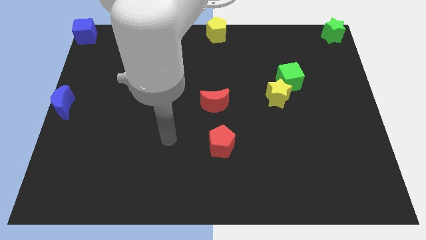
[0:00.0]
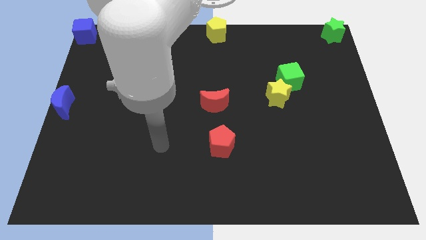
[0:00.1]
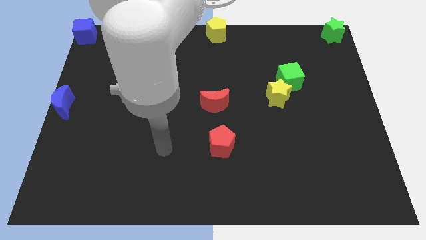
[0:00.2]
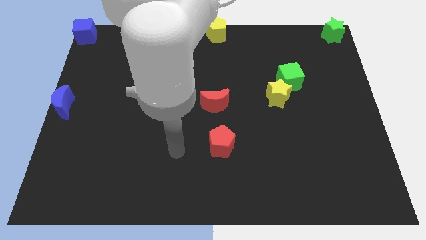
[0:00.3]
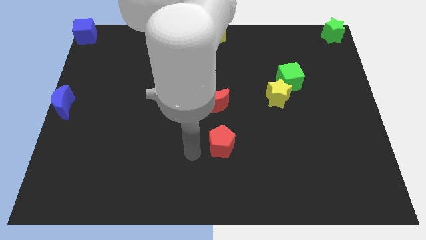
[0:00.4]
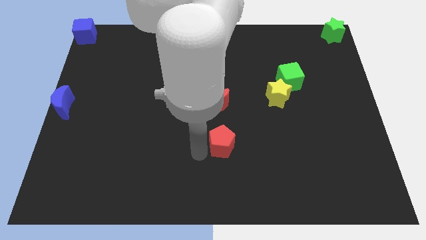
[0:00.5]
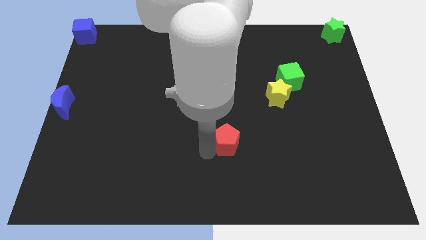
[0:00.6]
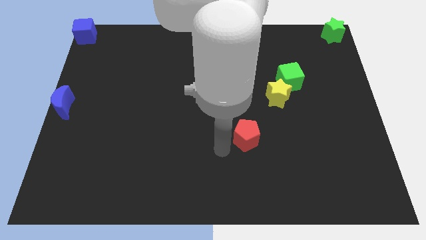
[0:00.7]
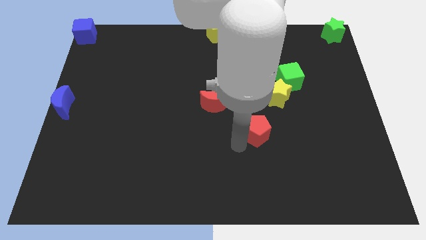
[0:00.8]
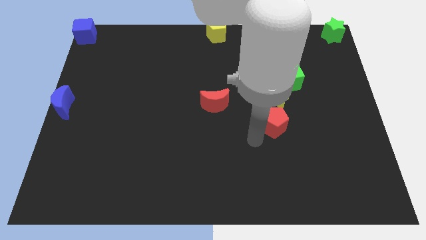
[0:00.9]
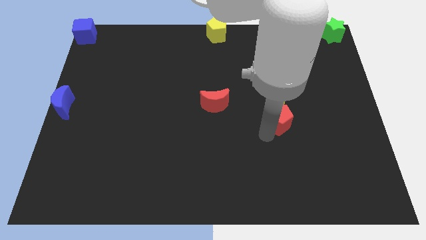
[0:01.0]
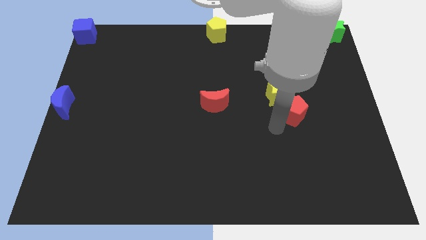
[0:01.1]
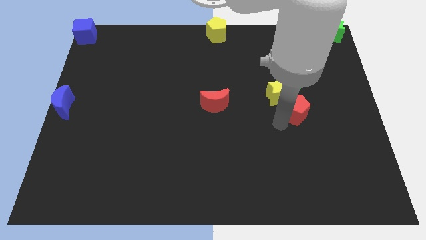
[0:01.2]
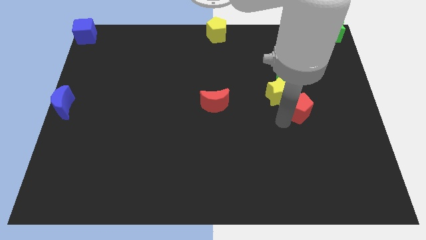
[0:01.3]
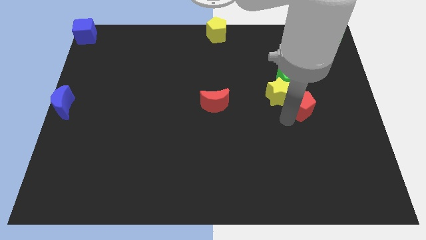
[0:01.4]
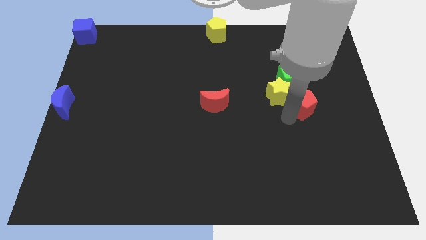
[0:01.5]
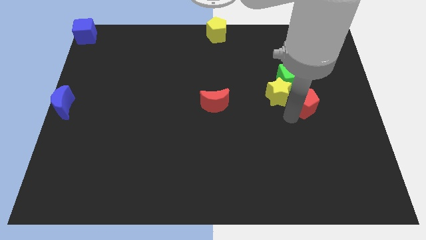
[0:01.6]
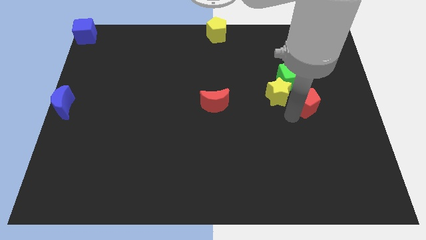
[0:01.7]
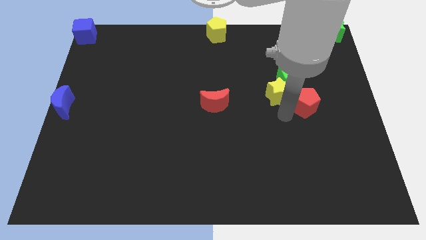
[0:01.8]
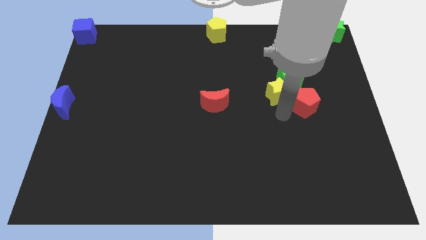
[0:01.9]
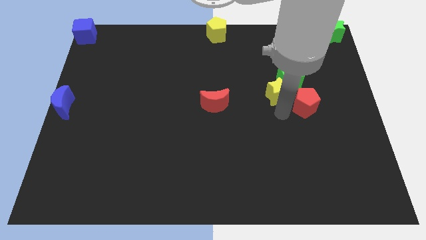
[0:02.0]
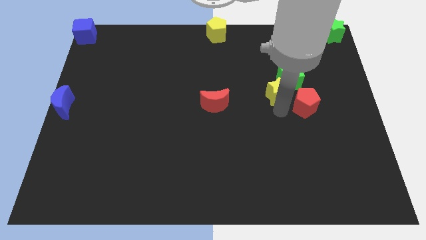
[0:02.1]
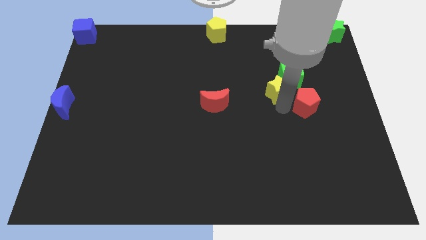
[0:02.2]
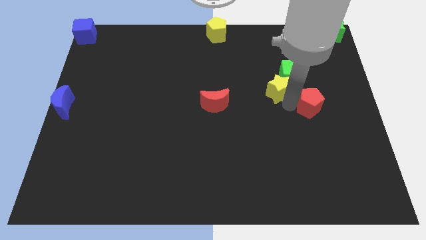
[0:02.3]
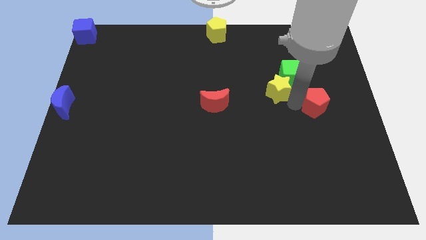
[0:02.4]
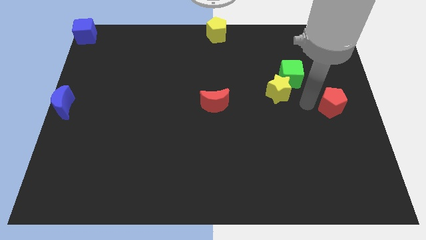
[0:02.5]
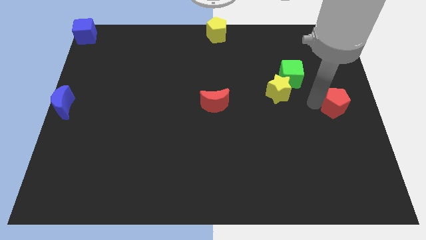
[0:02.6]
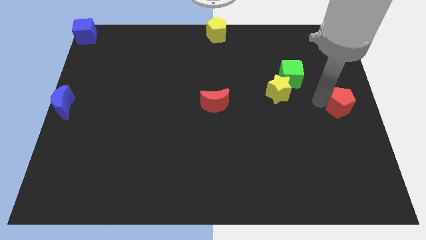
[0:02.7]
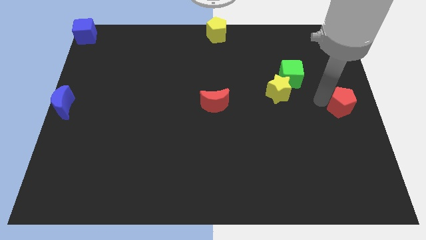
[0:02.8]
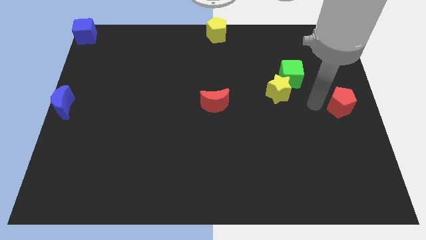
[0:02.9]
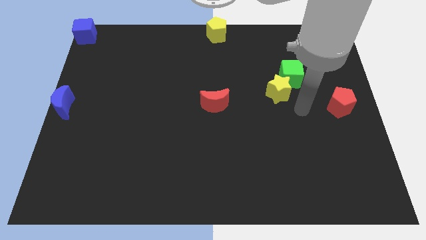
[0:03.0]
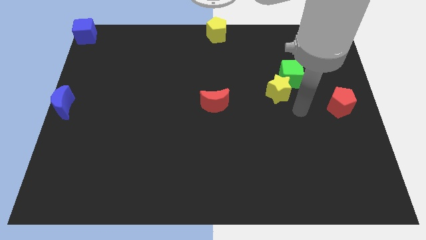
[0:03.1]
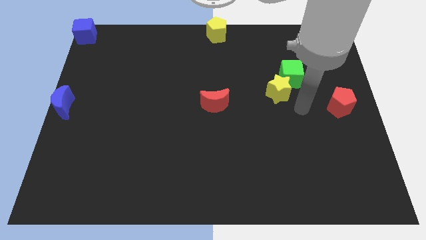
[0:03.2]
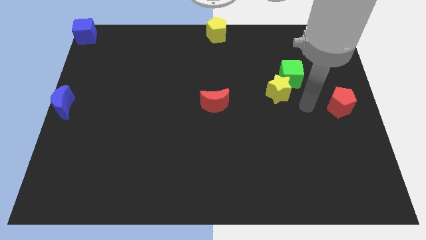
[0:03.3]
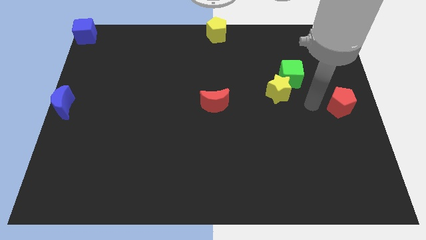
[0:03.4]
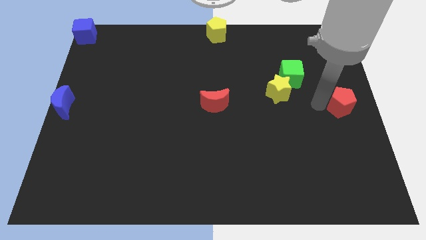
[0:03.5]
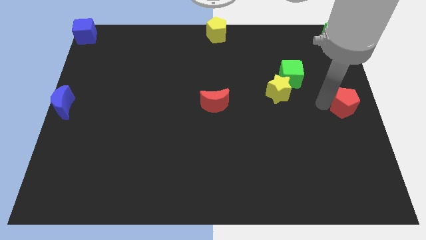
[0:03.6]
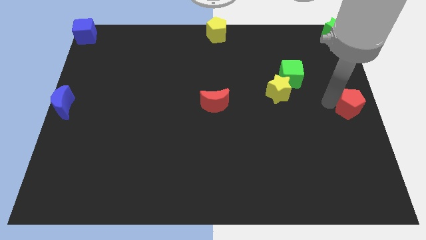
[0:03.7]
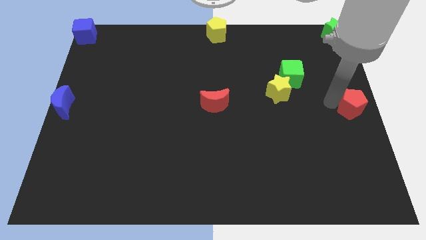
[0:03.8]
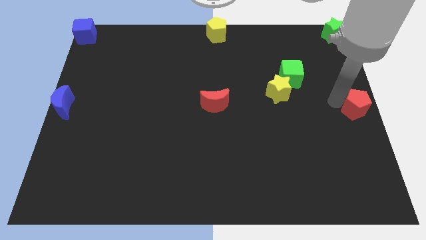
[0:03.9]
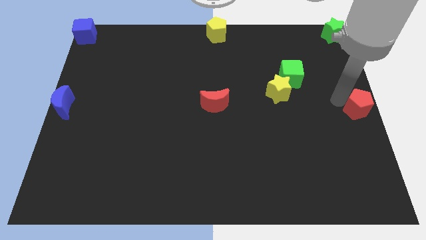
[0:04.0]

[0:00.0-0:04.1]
place the red pentagon at the center right

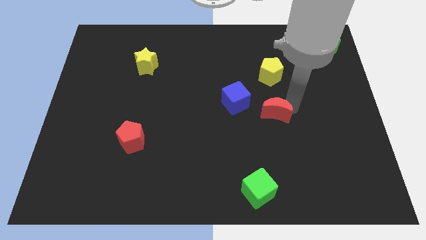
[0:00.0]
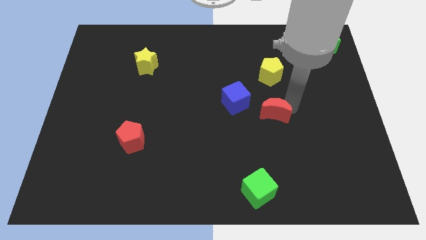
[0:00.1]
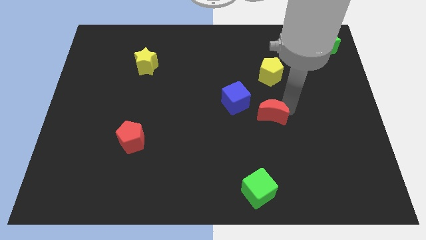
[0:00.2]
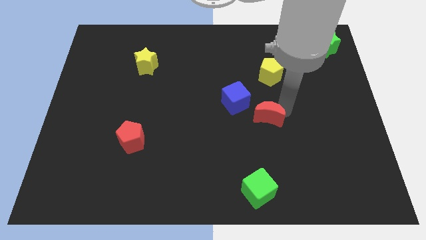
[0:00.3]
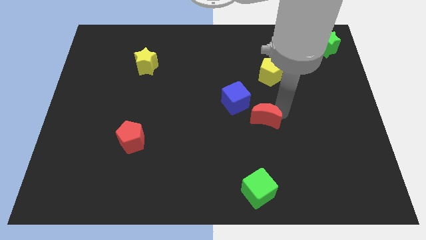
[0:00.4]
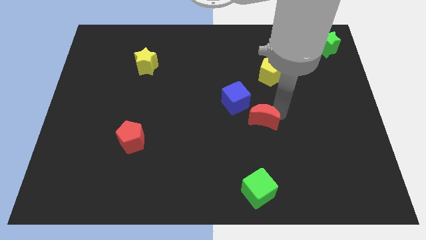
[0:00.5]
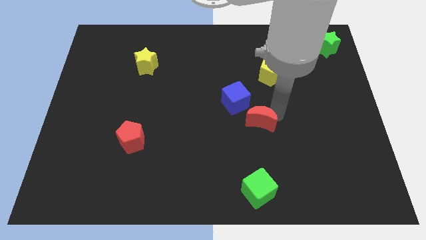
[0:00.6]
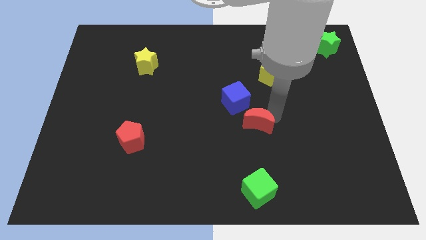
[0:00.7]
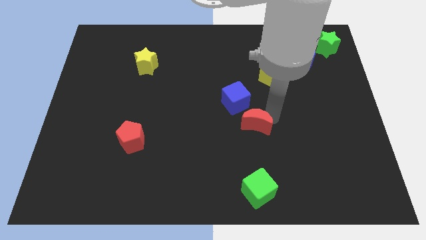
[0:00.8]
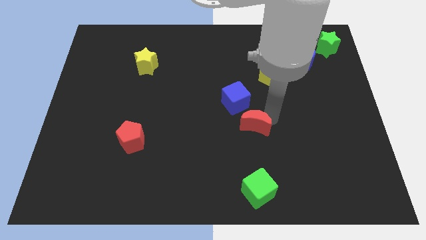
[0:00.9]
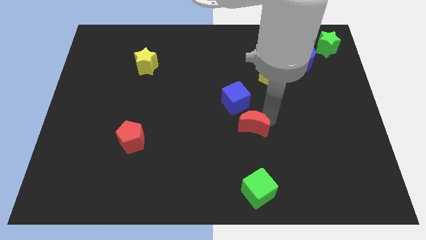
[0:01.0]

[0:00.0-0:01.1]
place the red crescent below the blue cube

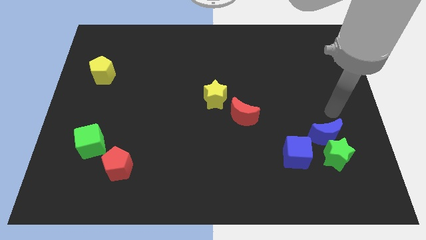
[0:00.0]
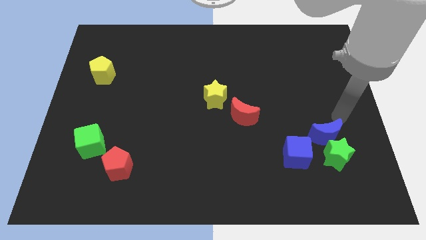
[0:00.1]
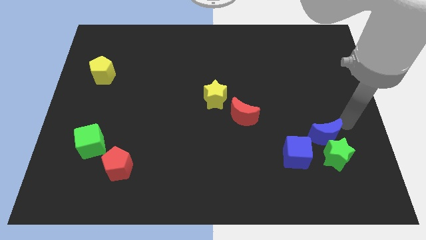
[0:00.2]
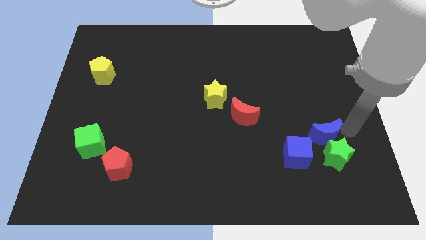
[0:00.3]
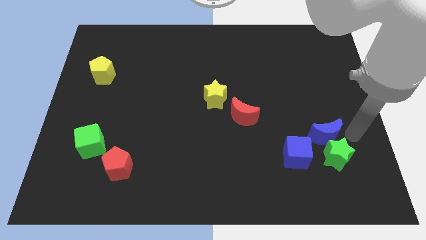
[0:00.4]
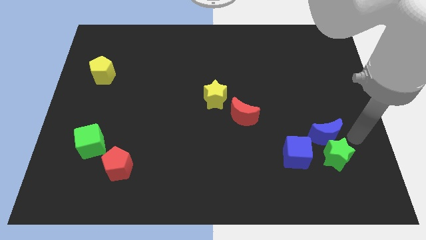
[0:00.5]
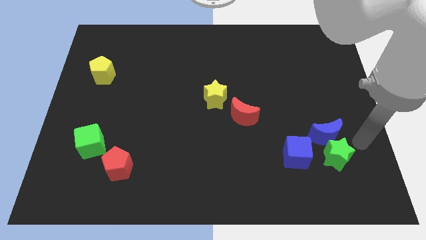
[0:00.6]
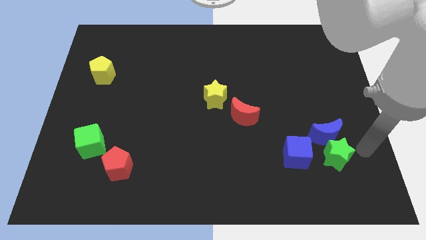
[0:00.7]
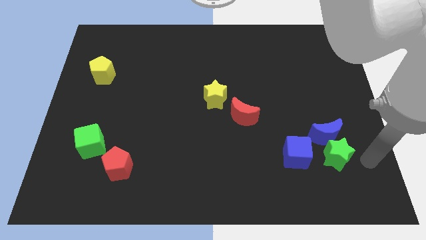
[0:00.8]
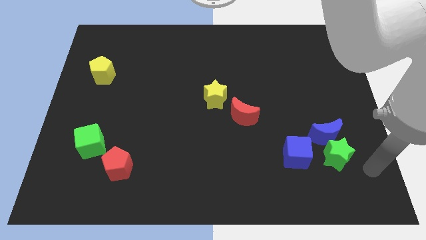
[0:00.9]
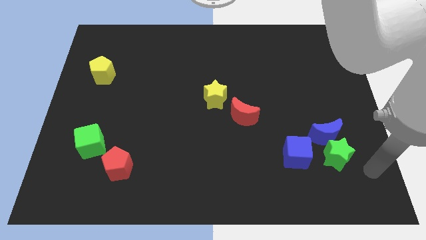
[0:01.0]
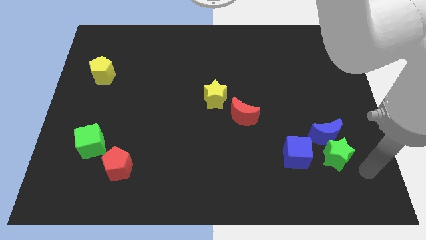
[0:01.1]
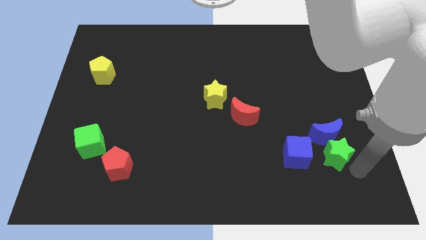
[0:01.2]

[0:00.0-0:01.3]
point your arm at the bottom right side of green star

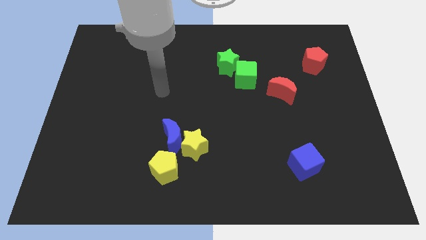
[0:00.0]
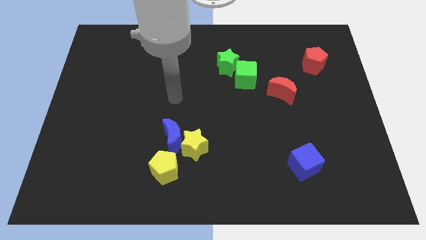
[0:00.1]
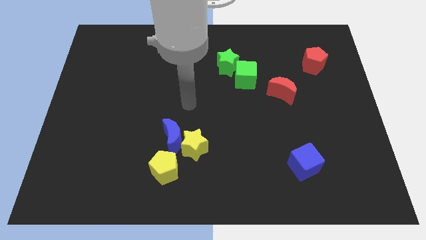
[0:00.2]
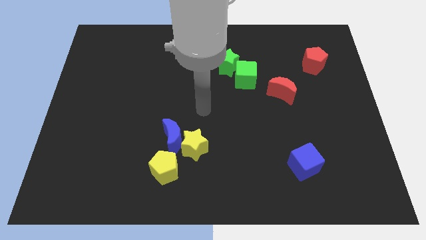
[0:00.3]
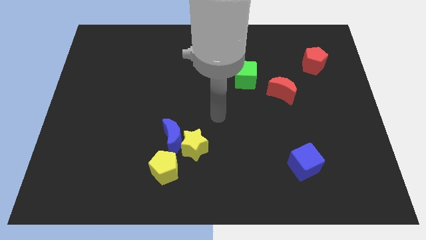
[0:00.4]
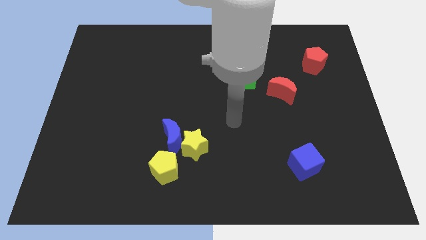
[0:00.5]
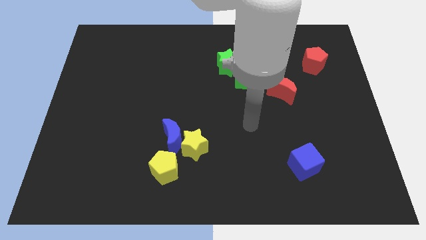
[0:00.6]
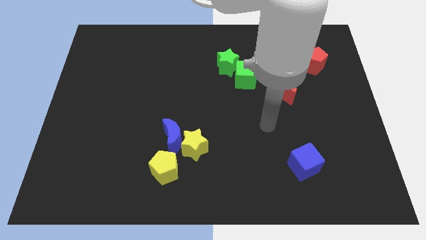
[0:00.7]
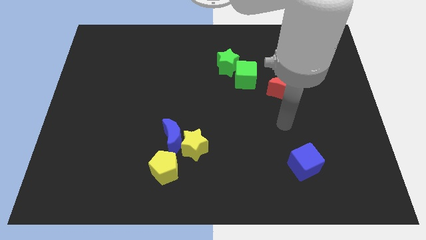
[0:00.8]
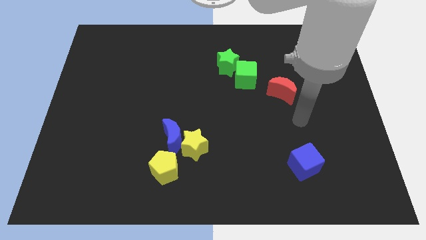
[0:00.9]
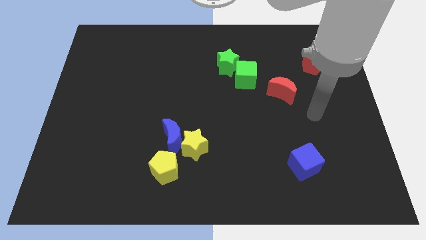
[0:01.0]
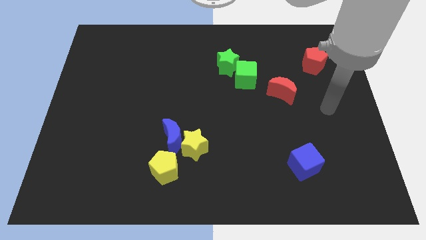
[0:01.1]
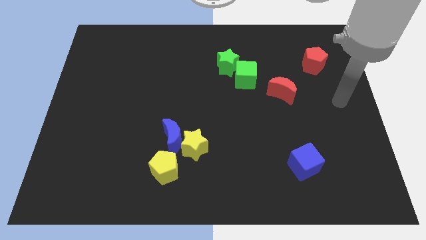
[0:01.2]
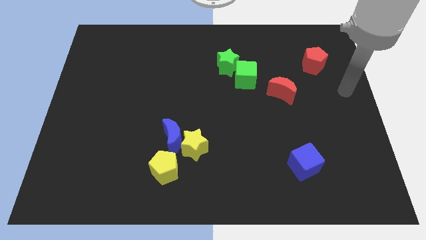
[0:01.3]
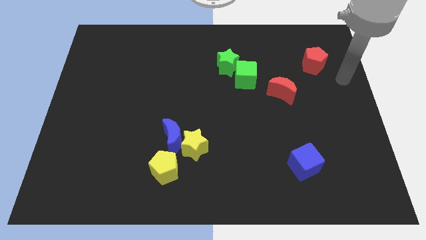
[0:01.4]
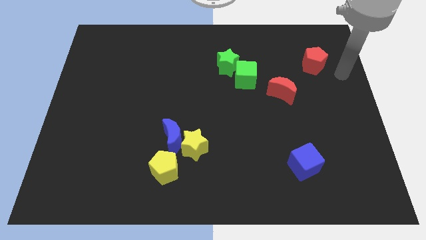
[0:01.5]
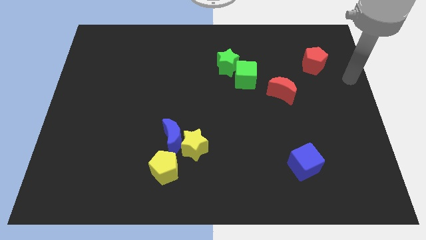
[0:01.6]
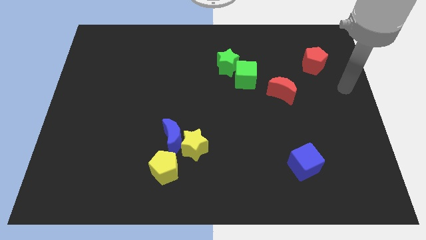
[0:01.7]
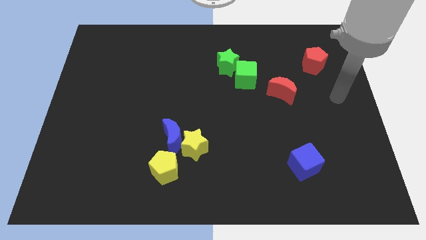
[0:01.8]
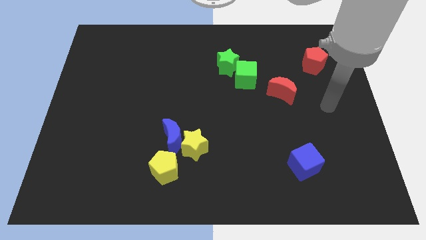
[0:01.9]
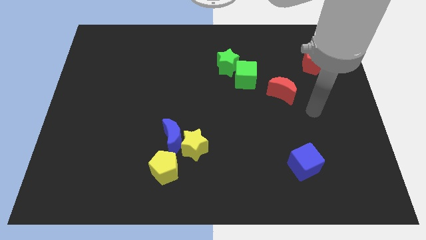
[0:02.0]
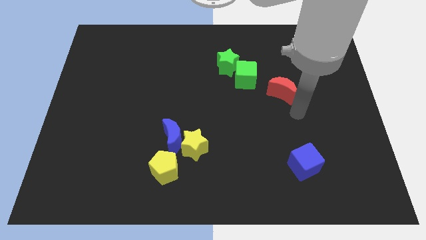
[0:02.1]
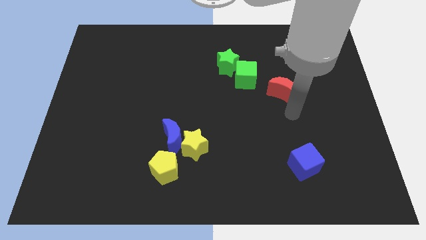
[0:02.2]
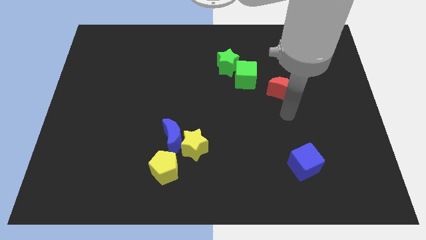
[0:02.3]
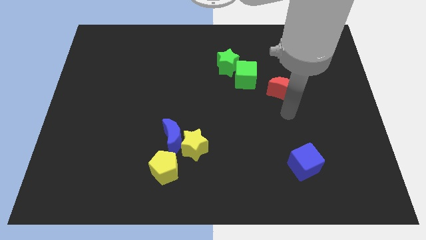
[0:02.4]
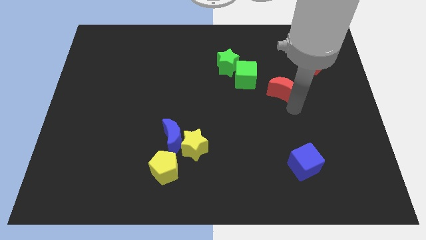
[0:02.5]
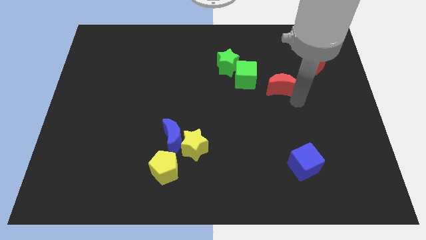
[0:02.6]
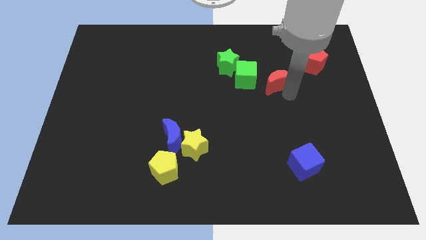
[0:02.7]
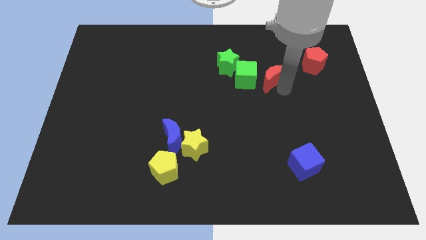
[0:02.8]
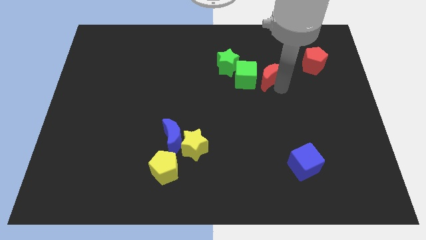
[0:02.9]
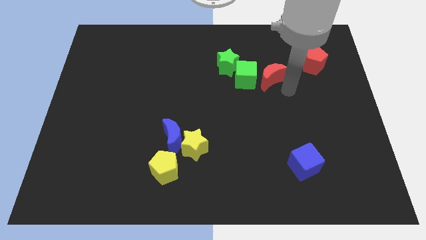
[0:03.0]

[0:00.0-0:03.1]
move red moon to the right of green cube
